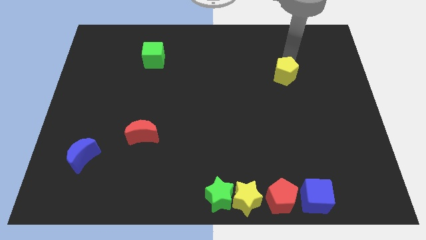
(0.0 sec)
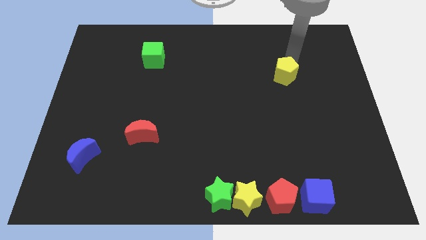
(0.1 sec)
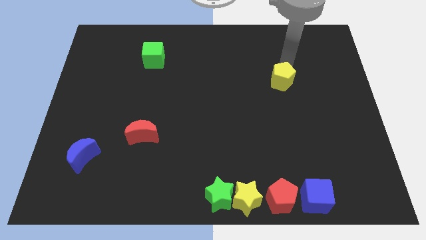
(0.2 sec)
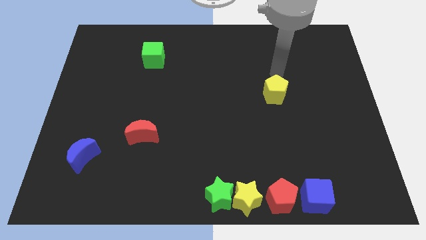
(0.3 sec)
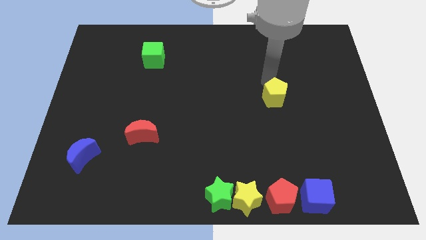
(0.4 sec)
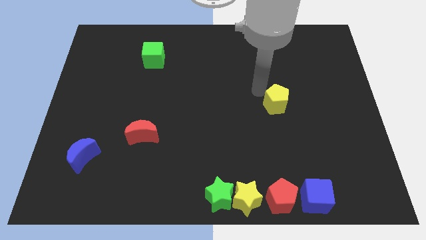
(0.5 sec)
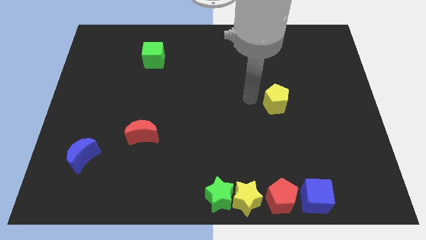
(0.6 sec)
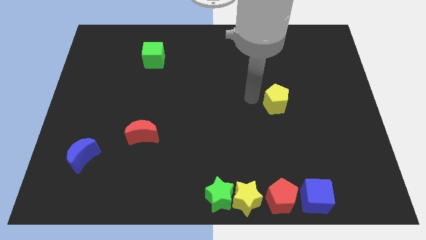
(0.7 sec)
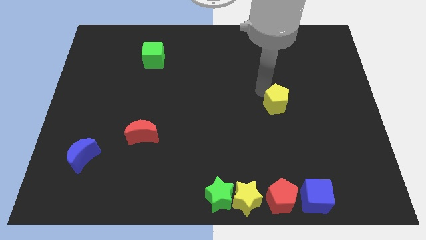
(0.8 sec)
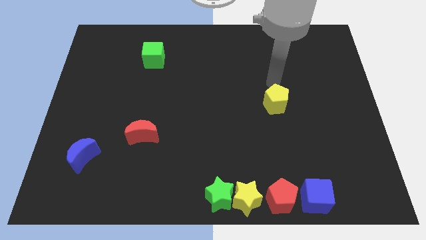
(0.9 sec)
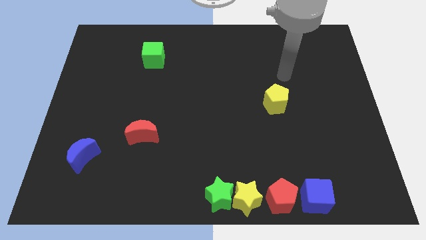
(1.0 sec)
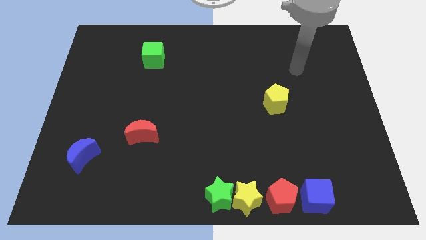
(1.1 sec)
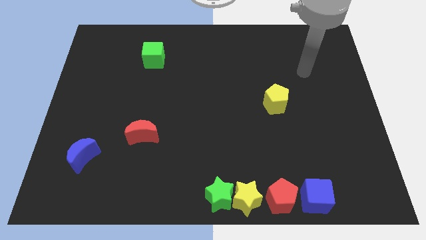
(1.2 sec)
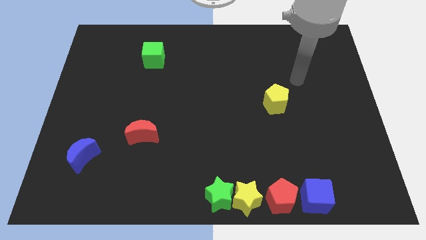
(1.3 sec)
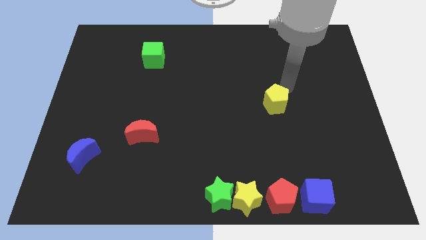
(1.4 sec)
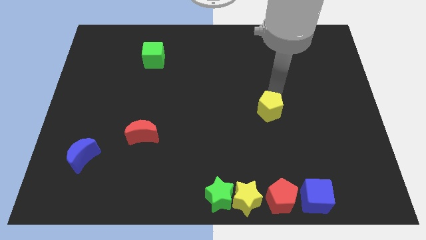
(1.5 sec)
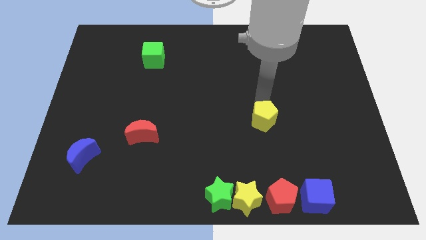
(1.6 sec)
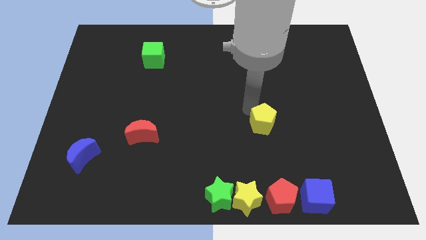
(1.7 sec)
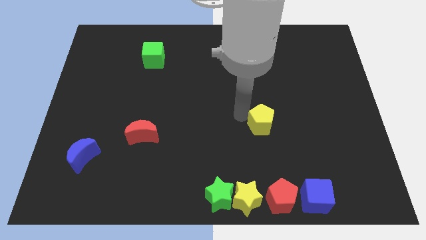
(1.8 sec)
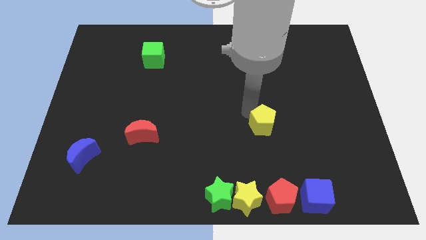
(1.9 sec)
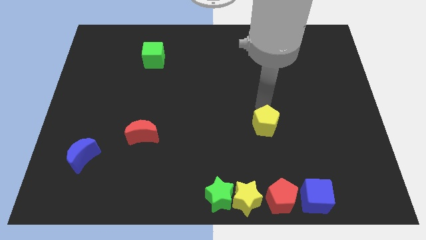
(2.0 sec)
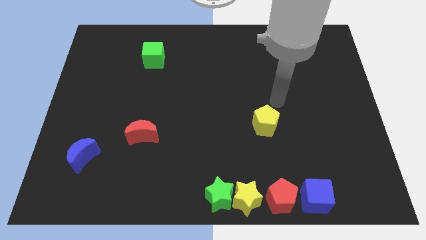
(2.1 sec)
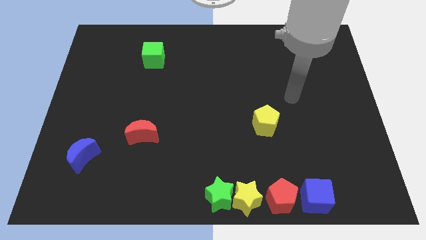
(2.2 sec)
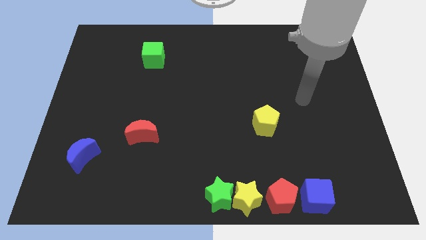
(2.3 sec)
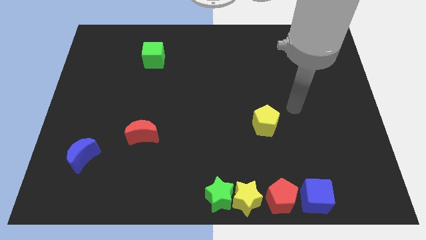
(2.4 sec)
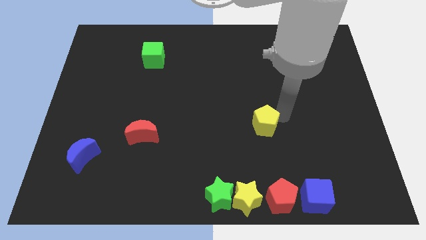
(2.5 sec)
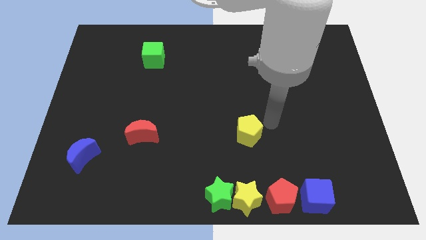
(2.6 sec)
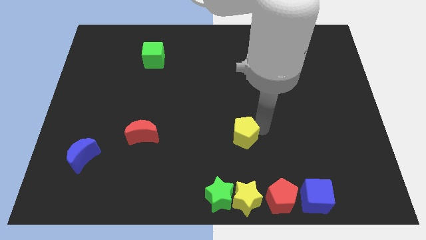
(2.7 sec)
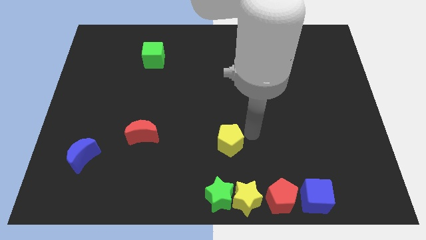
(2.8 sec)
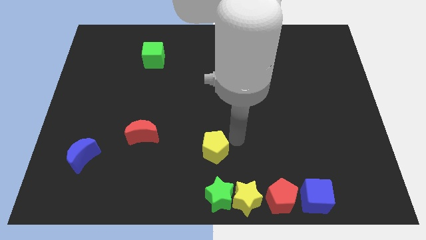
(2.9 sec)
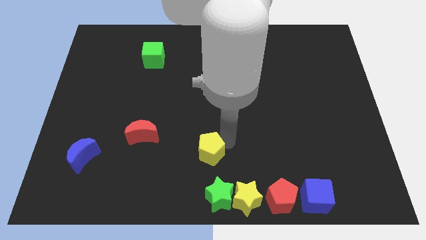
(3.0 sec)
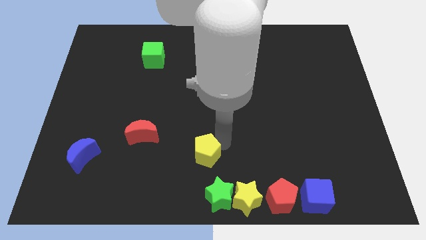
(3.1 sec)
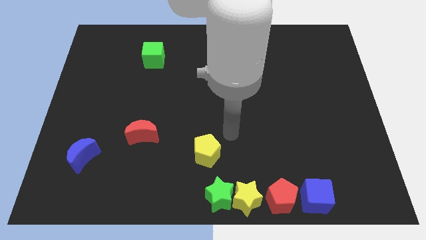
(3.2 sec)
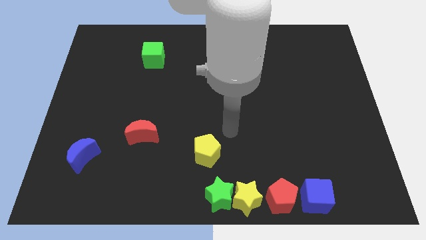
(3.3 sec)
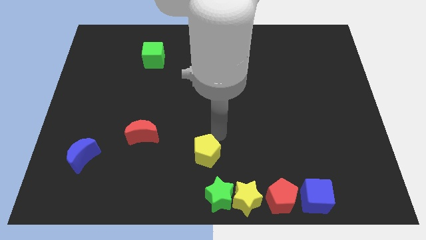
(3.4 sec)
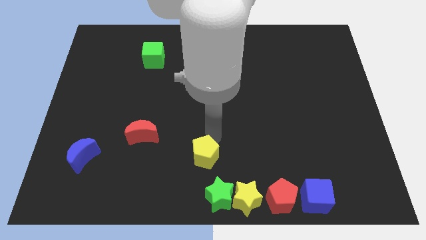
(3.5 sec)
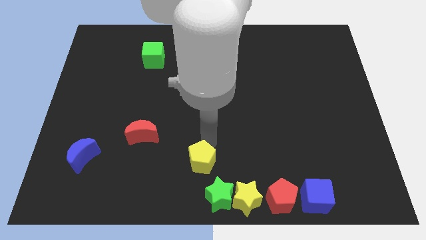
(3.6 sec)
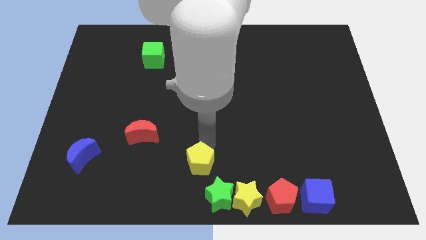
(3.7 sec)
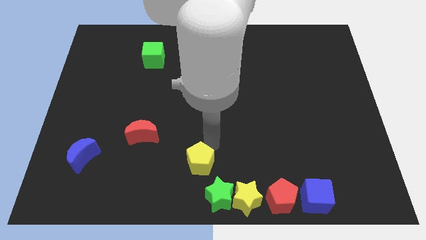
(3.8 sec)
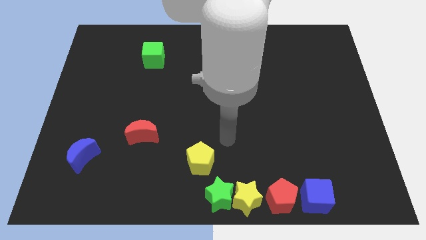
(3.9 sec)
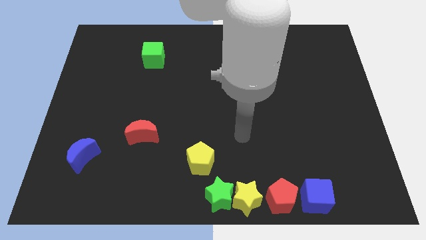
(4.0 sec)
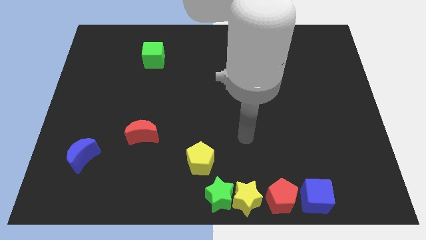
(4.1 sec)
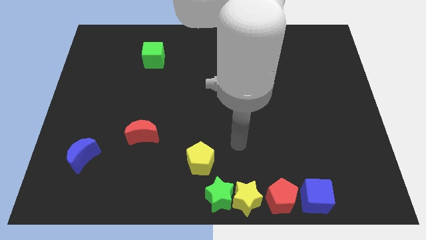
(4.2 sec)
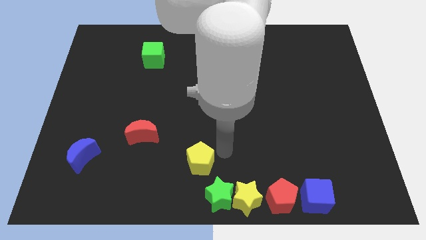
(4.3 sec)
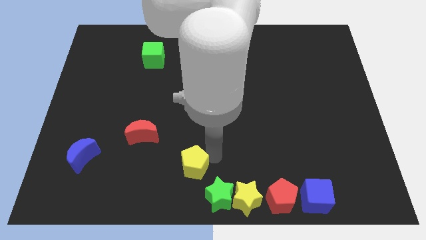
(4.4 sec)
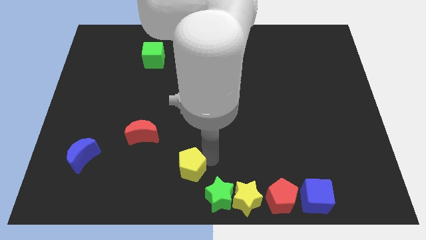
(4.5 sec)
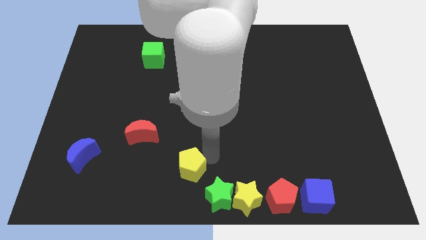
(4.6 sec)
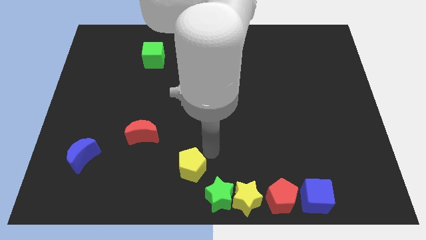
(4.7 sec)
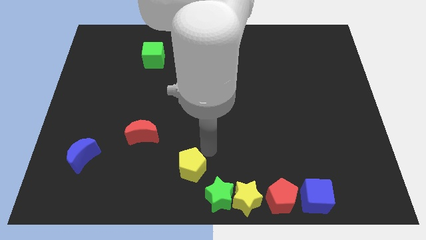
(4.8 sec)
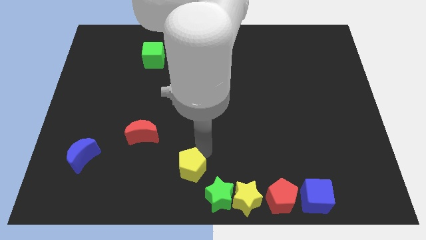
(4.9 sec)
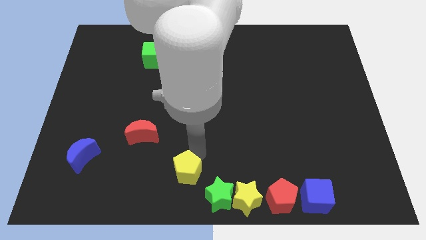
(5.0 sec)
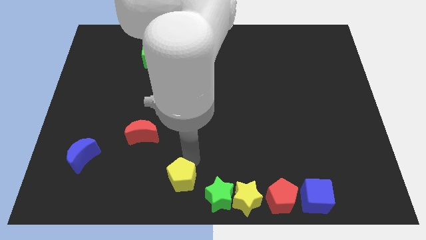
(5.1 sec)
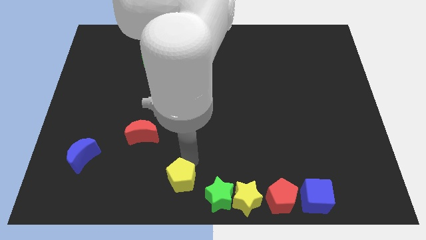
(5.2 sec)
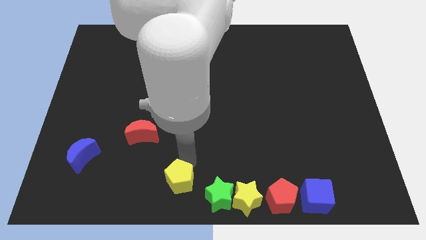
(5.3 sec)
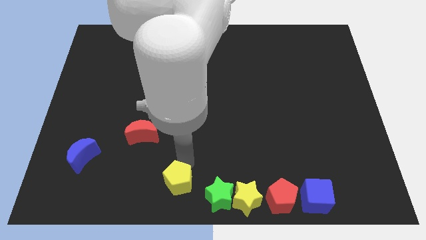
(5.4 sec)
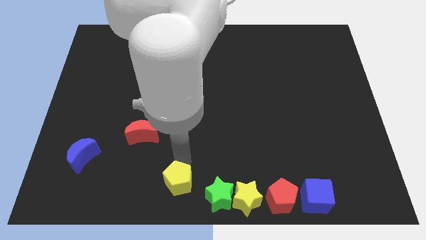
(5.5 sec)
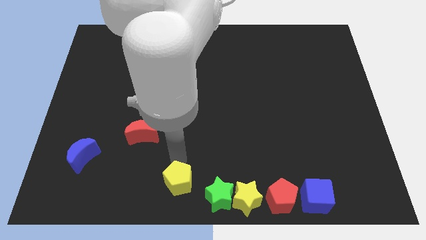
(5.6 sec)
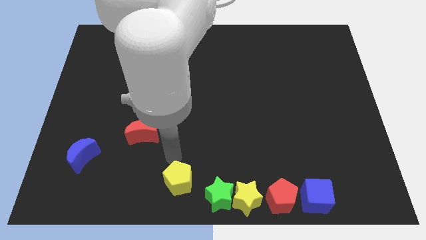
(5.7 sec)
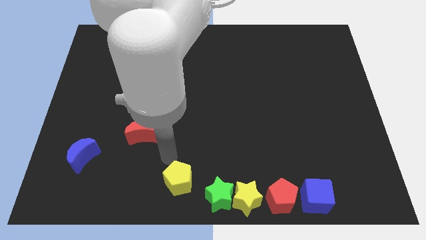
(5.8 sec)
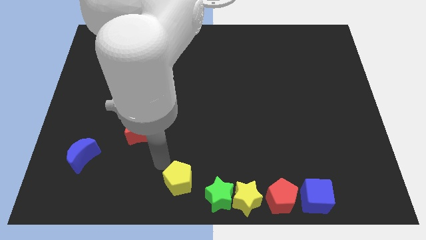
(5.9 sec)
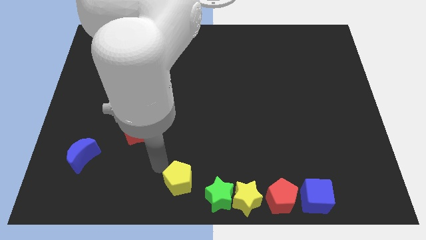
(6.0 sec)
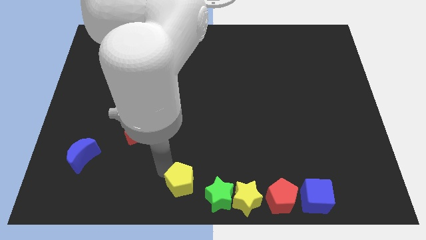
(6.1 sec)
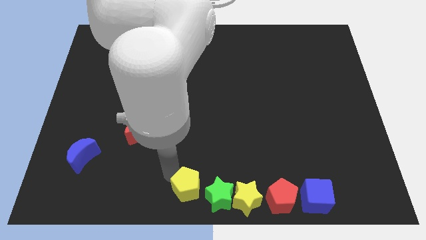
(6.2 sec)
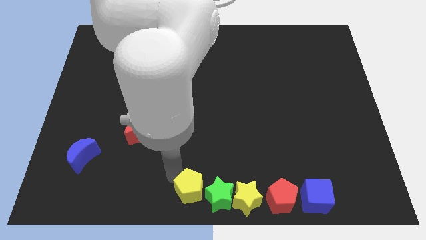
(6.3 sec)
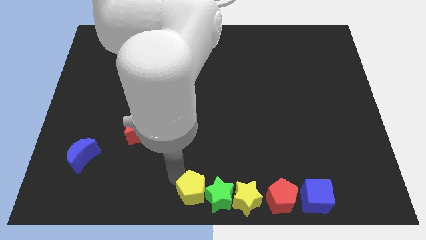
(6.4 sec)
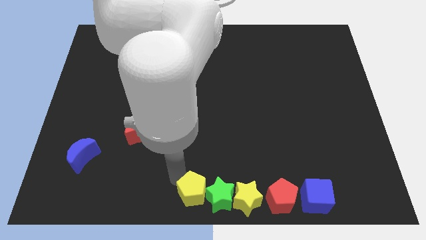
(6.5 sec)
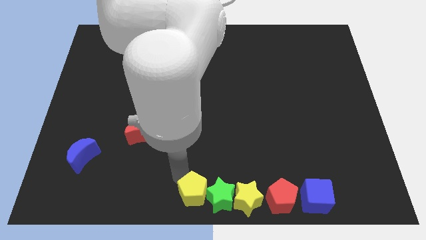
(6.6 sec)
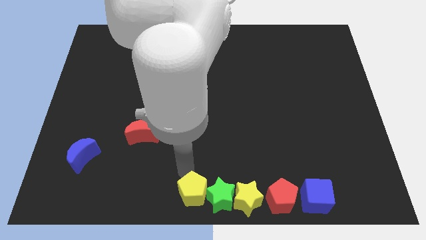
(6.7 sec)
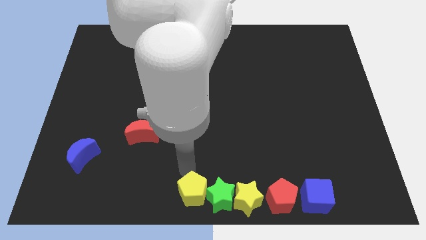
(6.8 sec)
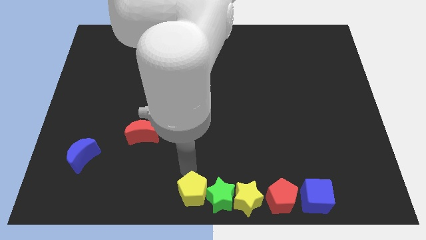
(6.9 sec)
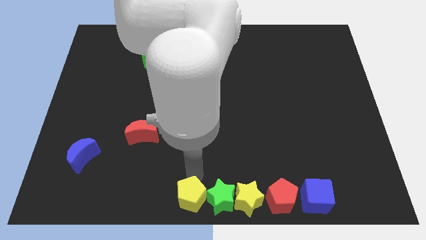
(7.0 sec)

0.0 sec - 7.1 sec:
drag the yellow pentagon to the left of the green star

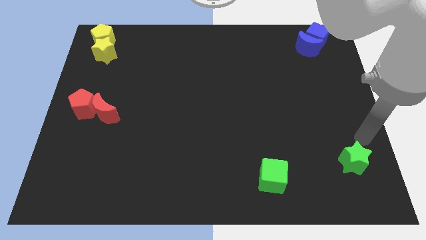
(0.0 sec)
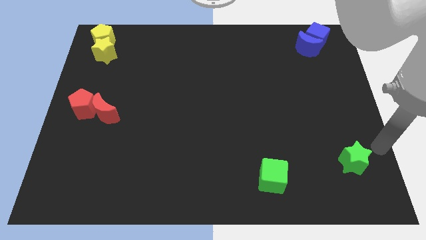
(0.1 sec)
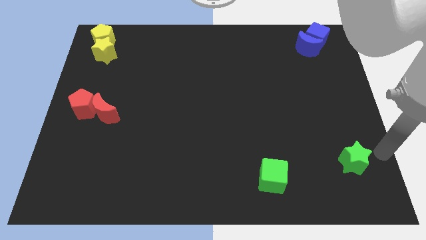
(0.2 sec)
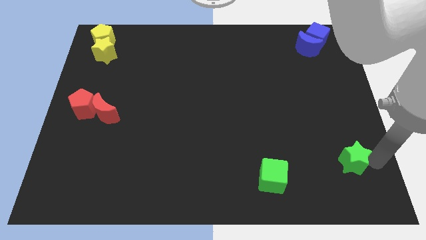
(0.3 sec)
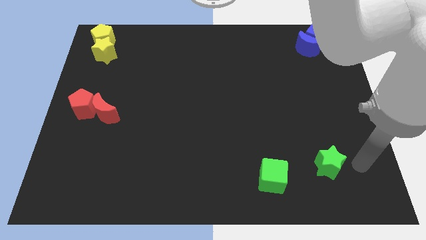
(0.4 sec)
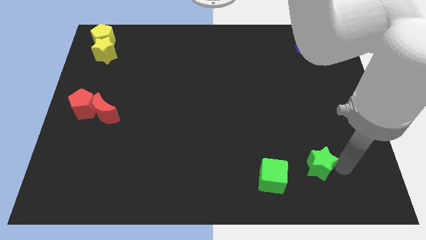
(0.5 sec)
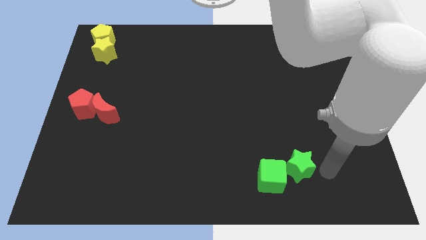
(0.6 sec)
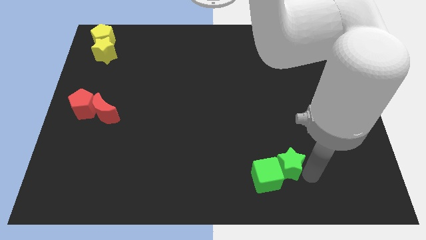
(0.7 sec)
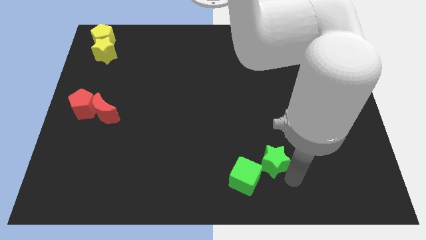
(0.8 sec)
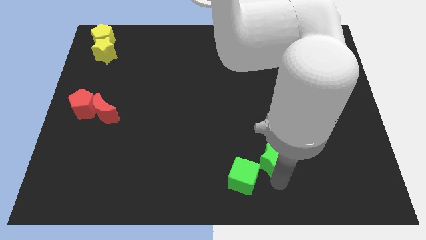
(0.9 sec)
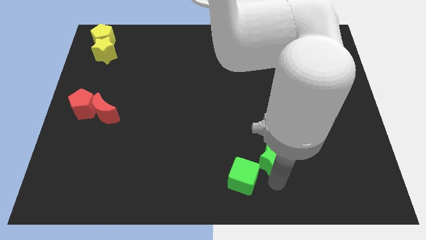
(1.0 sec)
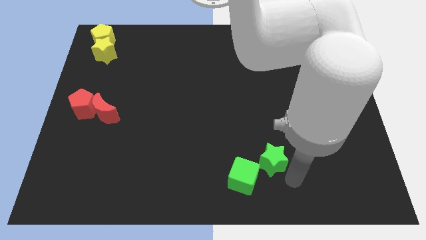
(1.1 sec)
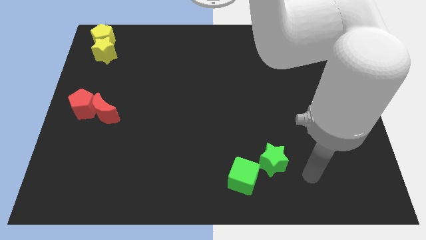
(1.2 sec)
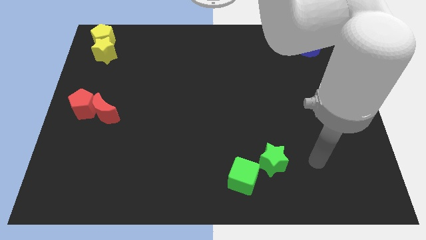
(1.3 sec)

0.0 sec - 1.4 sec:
push green star into the green cube

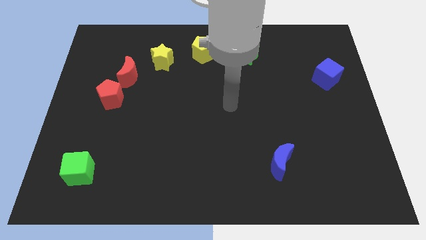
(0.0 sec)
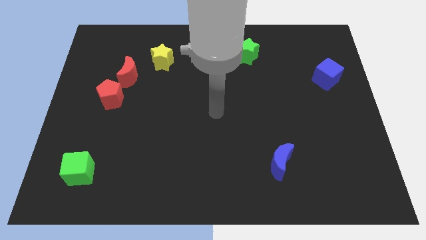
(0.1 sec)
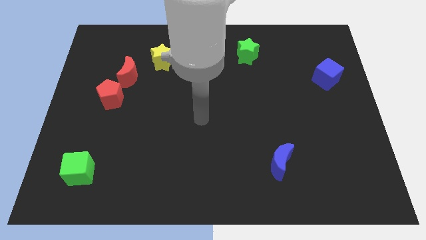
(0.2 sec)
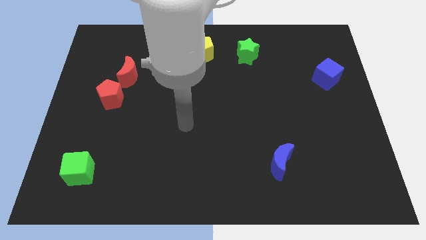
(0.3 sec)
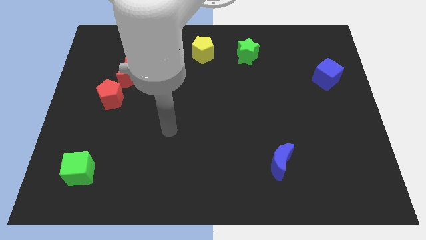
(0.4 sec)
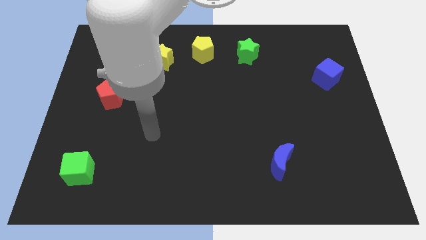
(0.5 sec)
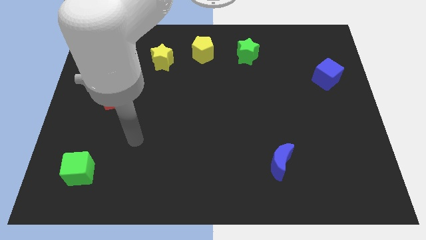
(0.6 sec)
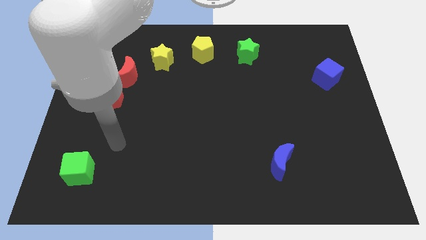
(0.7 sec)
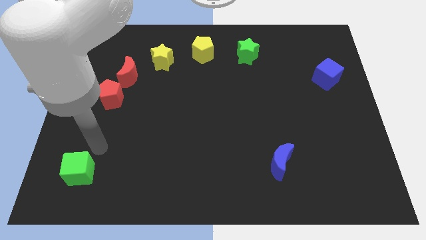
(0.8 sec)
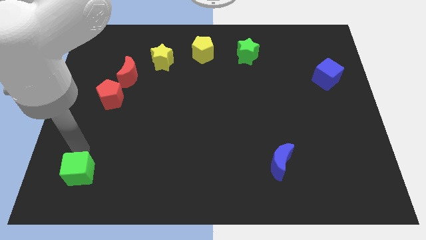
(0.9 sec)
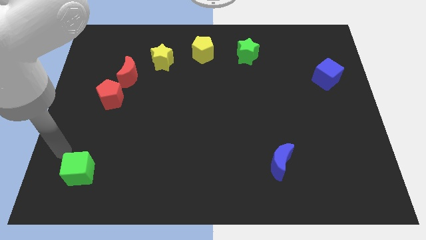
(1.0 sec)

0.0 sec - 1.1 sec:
go near green cube
